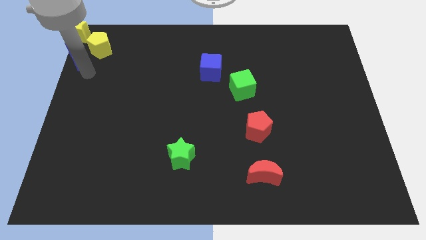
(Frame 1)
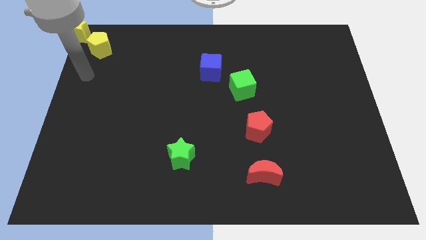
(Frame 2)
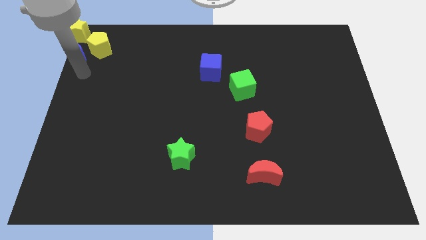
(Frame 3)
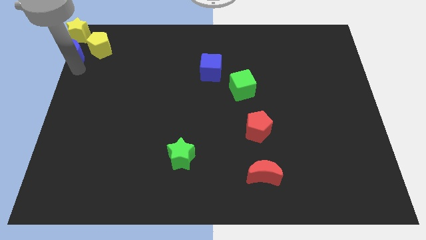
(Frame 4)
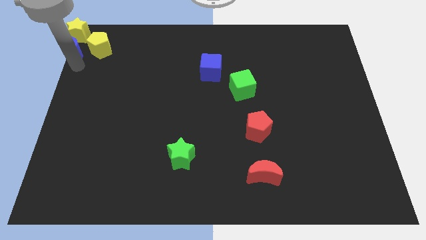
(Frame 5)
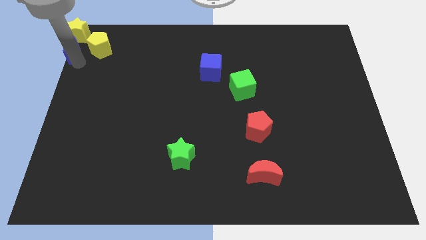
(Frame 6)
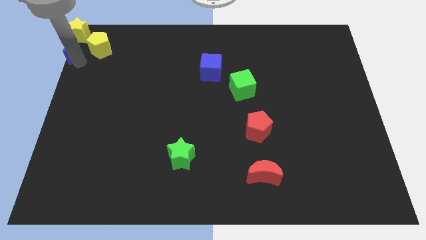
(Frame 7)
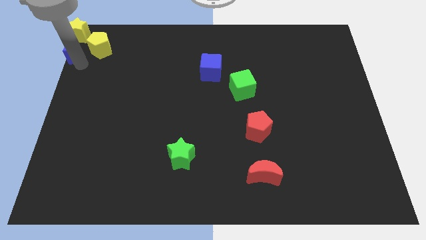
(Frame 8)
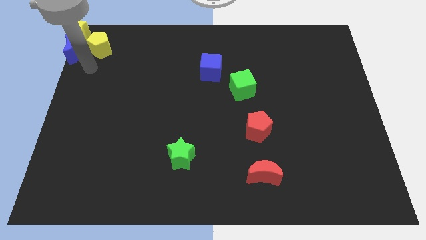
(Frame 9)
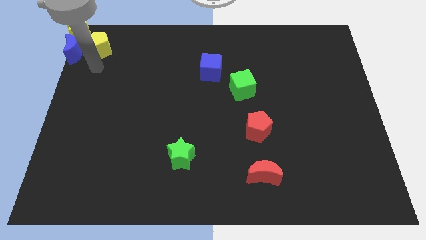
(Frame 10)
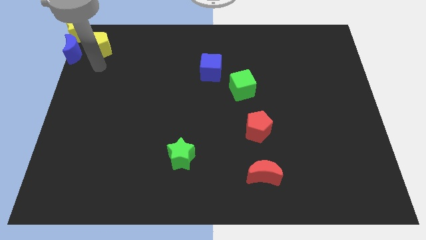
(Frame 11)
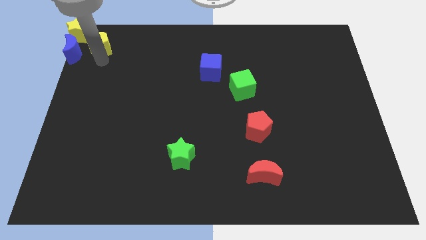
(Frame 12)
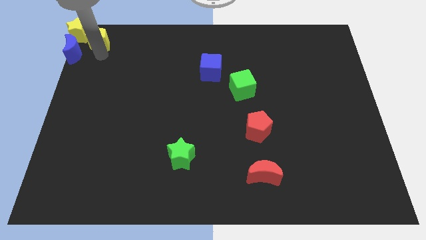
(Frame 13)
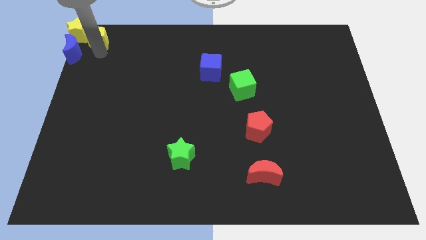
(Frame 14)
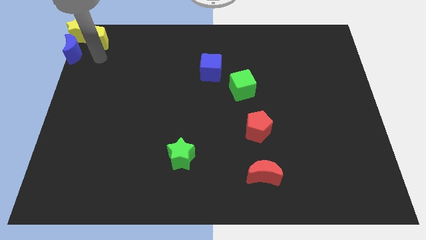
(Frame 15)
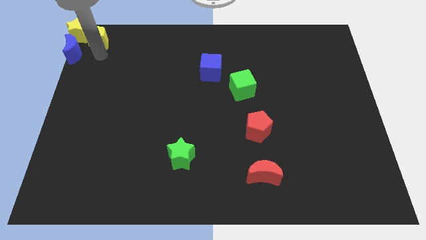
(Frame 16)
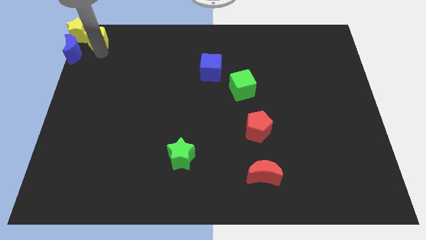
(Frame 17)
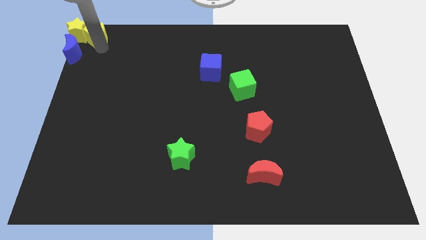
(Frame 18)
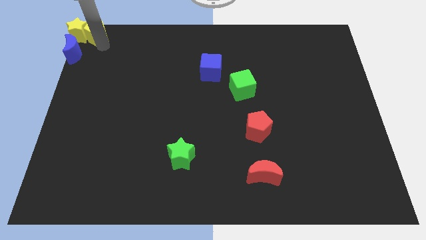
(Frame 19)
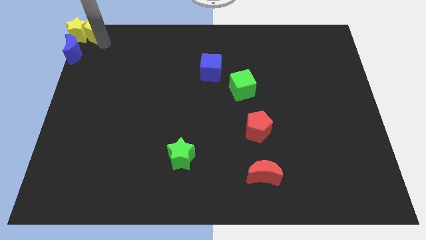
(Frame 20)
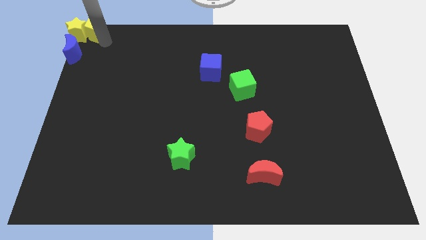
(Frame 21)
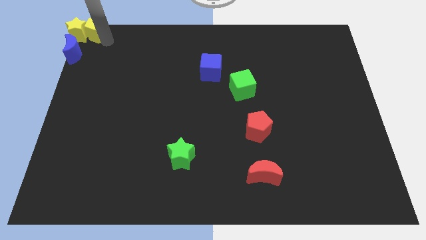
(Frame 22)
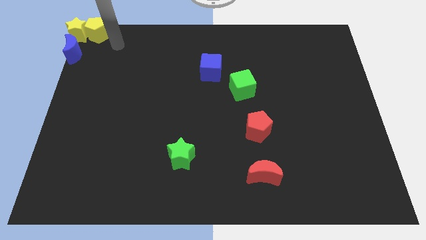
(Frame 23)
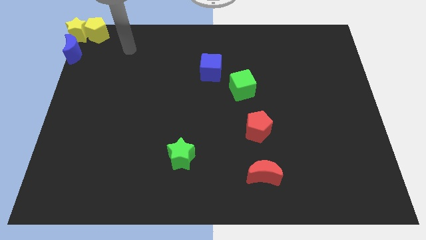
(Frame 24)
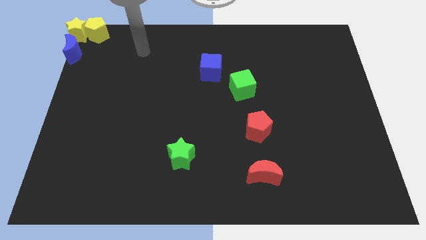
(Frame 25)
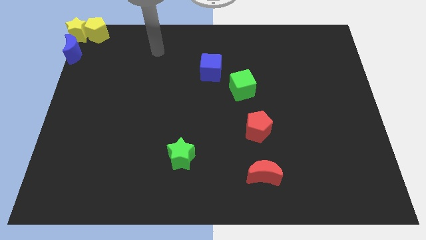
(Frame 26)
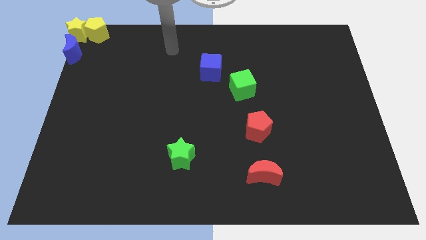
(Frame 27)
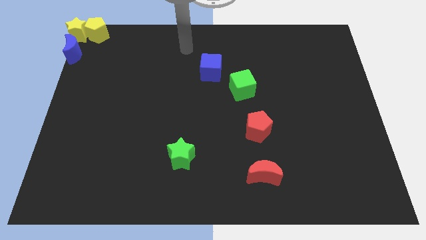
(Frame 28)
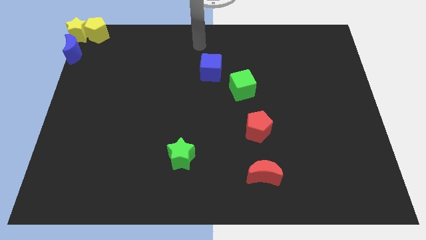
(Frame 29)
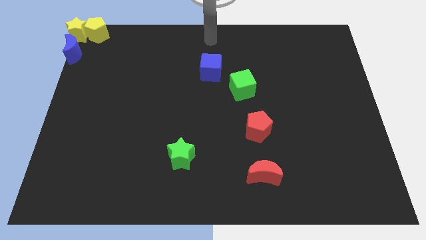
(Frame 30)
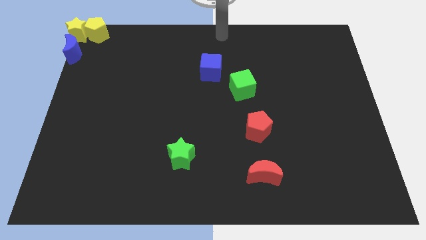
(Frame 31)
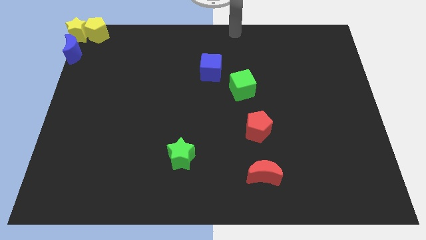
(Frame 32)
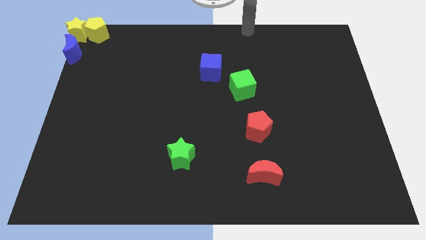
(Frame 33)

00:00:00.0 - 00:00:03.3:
place the yellow pentagon yellow star and blue crescent at the top left corner of the board

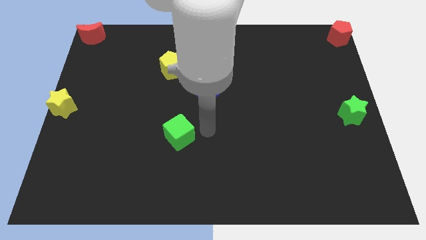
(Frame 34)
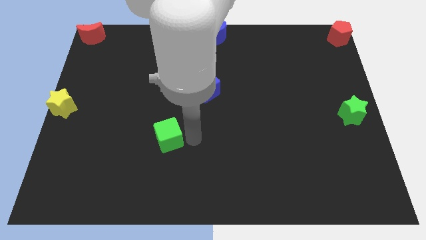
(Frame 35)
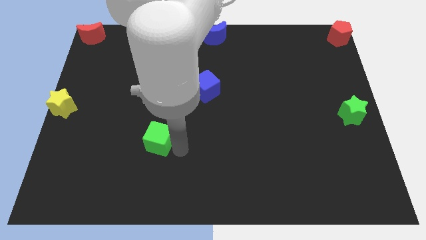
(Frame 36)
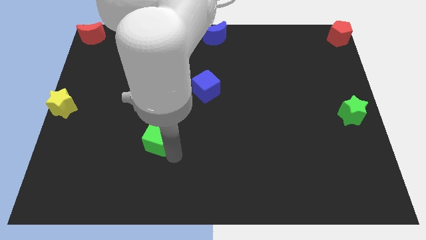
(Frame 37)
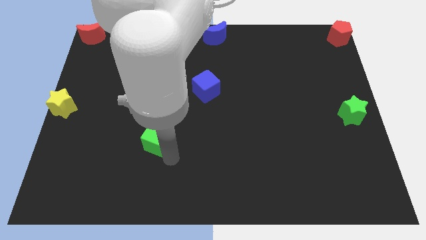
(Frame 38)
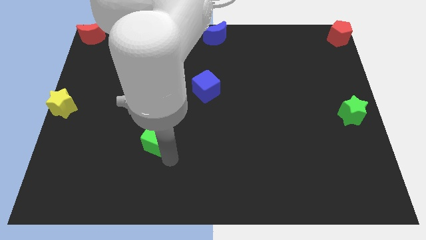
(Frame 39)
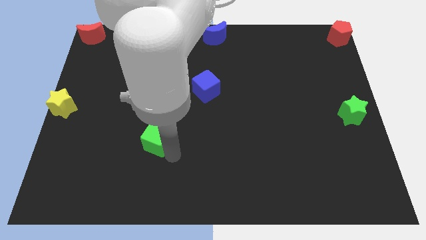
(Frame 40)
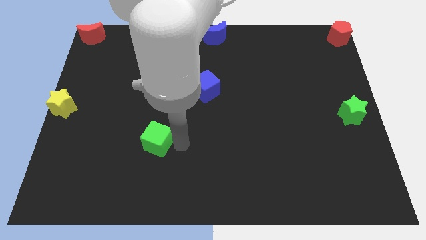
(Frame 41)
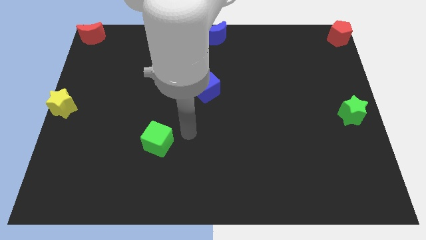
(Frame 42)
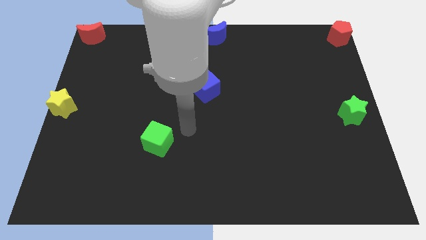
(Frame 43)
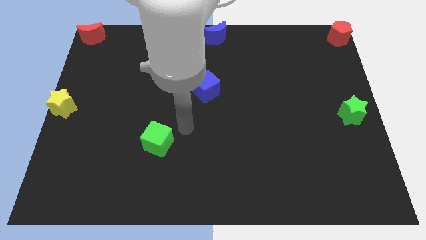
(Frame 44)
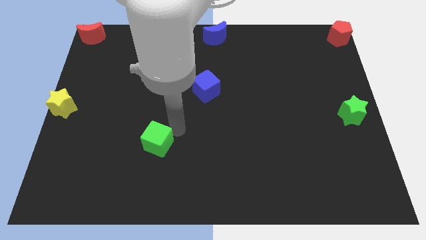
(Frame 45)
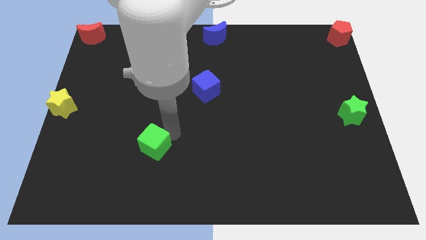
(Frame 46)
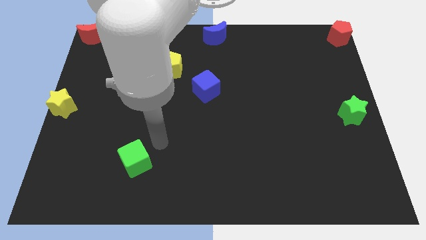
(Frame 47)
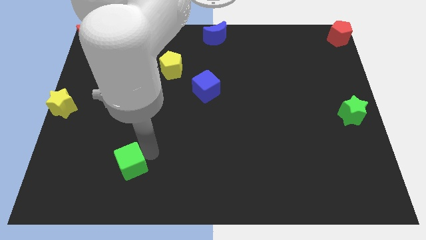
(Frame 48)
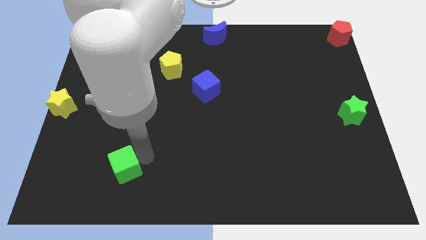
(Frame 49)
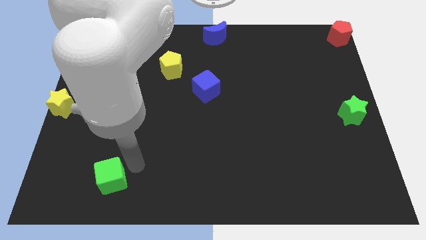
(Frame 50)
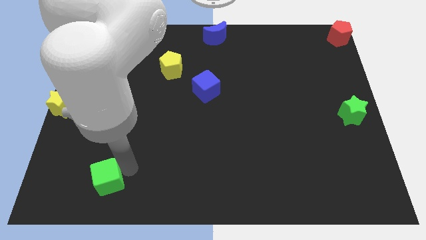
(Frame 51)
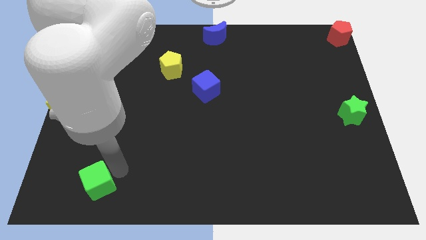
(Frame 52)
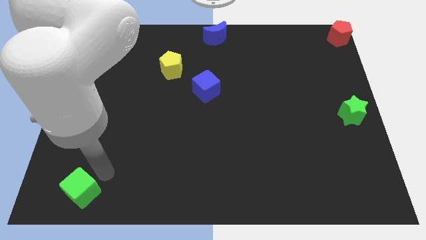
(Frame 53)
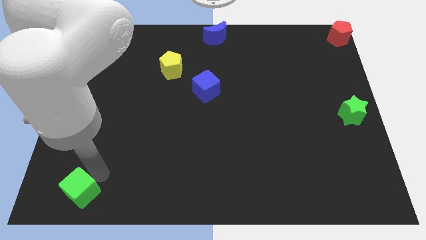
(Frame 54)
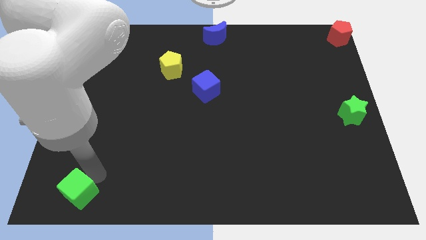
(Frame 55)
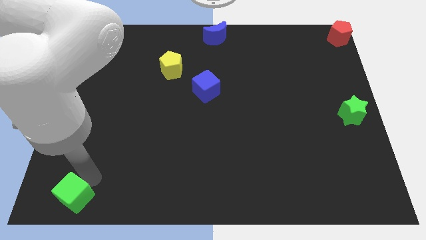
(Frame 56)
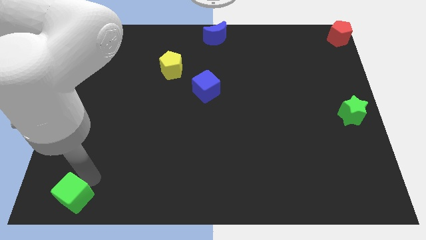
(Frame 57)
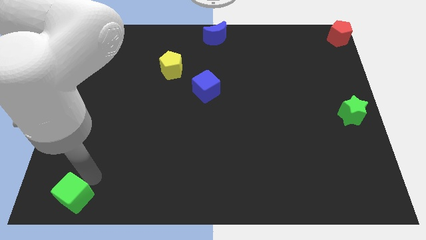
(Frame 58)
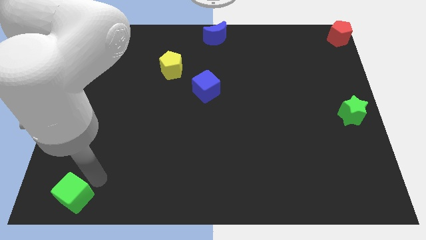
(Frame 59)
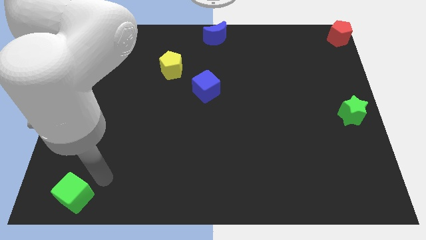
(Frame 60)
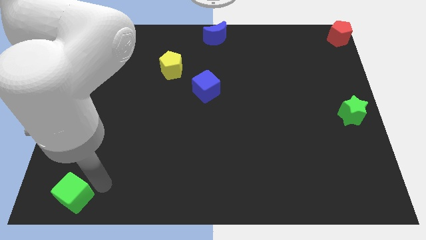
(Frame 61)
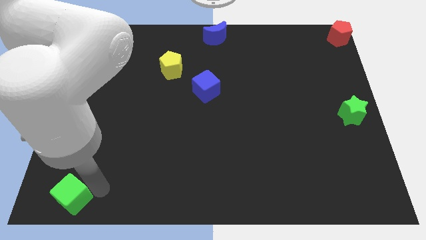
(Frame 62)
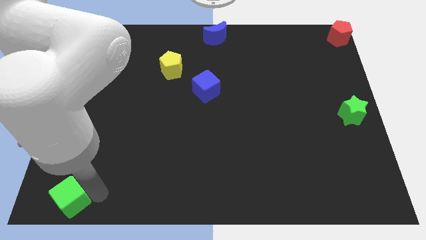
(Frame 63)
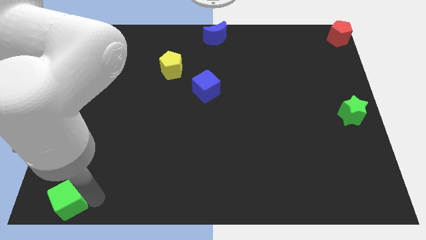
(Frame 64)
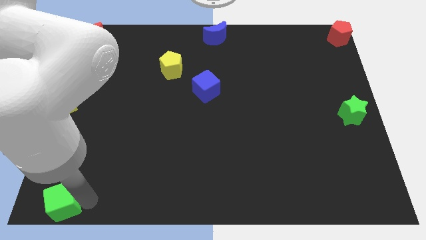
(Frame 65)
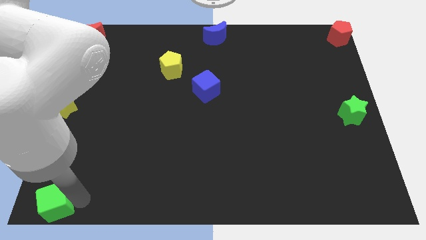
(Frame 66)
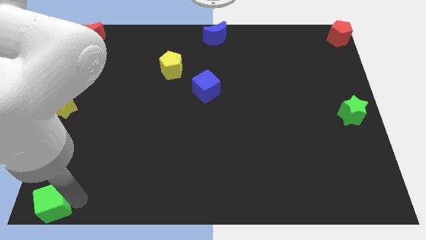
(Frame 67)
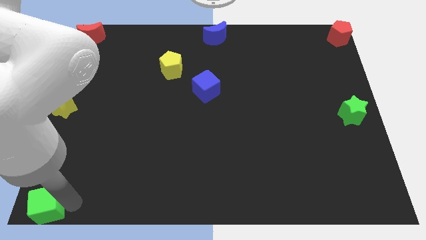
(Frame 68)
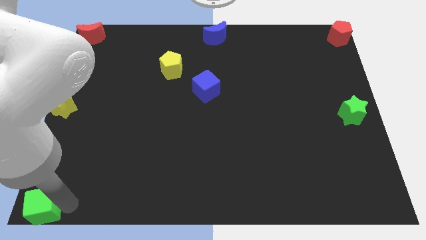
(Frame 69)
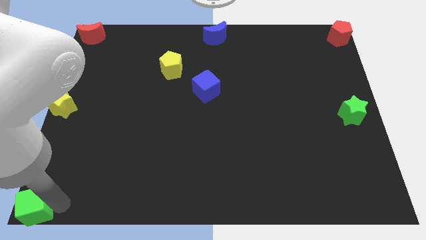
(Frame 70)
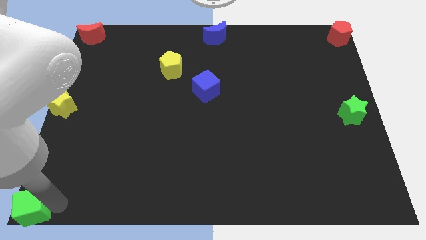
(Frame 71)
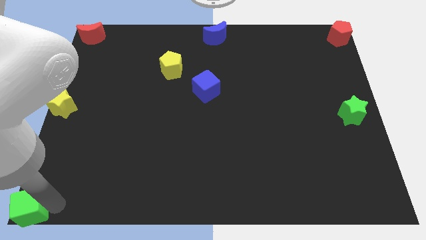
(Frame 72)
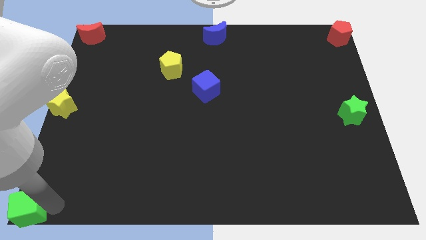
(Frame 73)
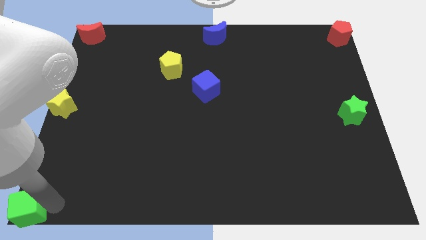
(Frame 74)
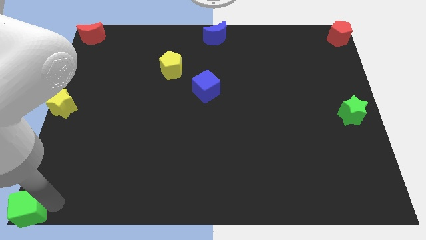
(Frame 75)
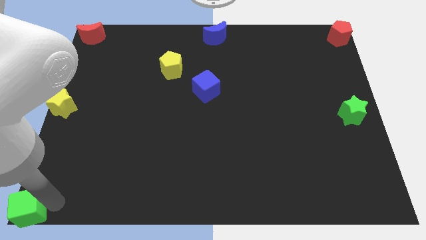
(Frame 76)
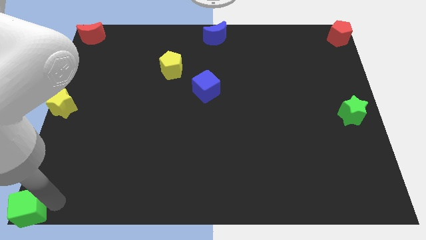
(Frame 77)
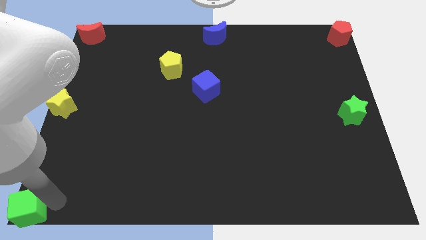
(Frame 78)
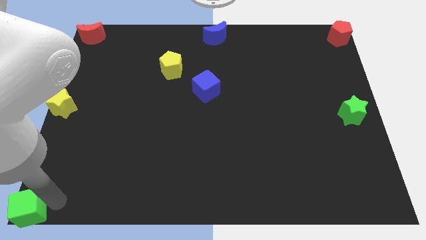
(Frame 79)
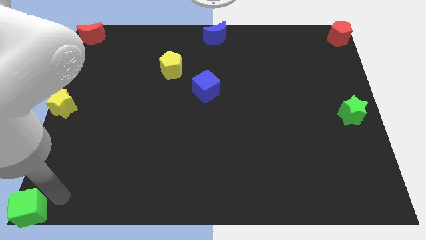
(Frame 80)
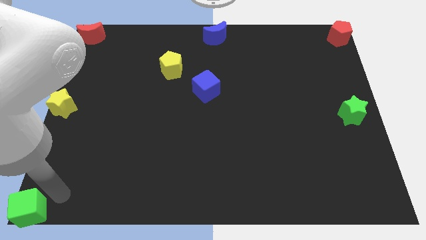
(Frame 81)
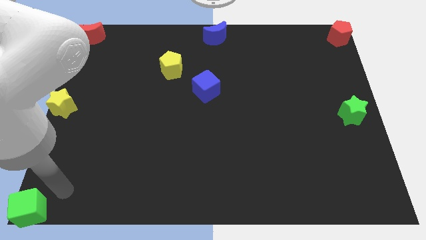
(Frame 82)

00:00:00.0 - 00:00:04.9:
slide the green cube to the bottom left corner of the board

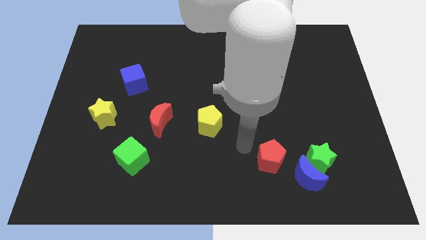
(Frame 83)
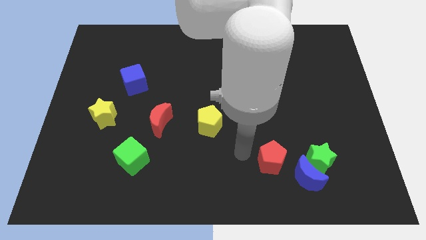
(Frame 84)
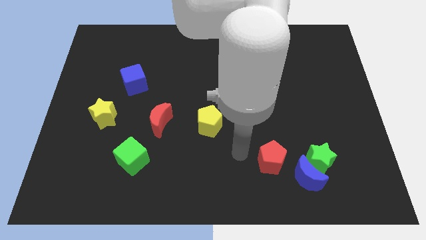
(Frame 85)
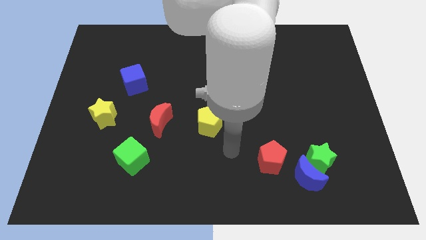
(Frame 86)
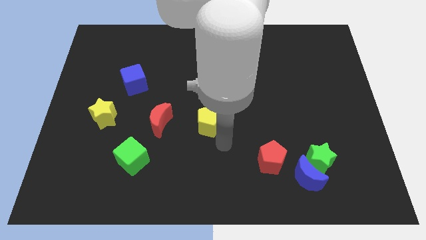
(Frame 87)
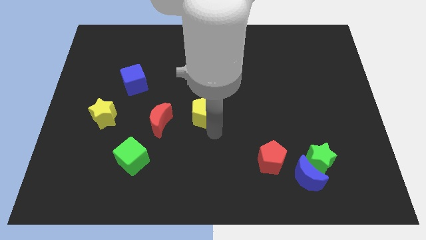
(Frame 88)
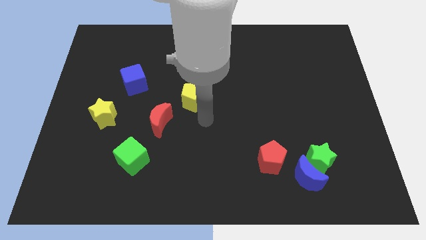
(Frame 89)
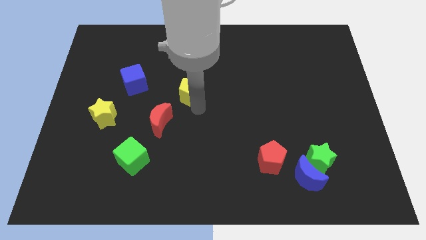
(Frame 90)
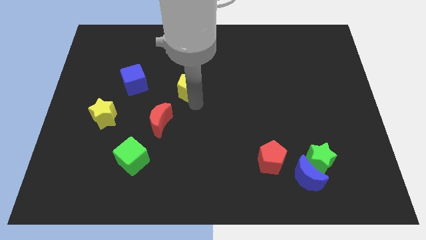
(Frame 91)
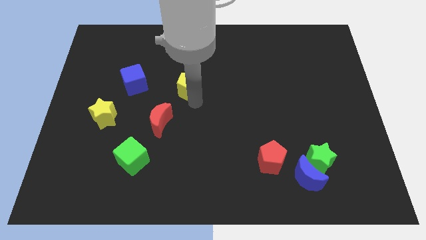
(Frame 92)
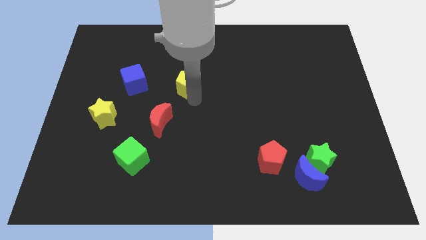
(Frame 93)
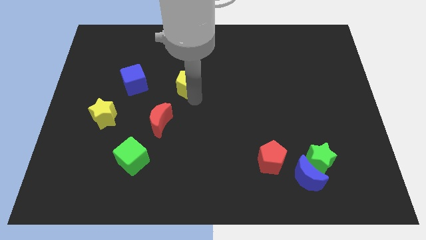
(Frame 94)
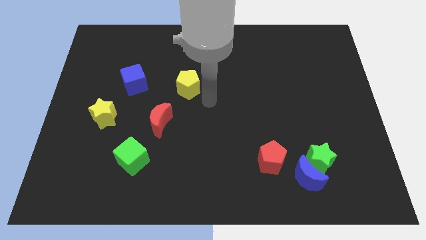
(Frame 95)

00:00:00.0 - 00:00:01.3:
move the yellow pentagon diagonally top right to the red moon
